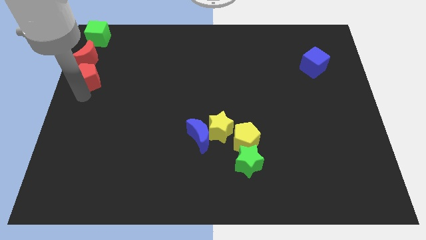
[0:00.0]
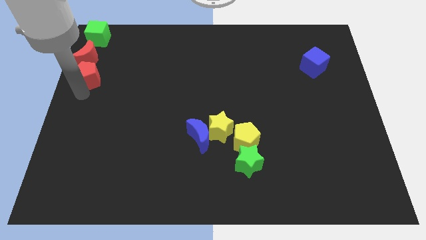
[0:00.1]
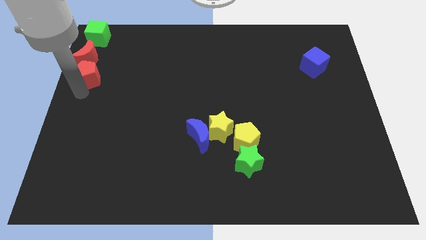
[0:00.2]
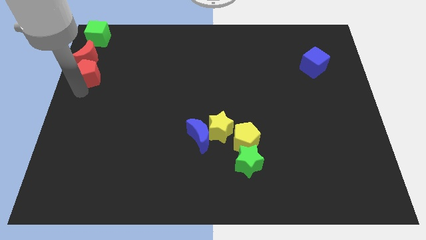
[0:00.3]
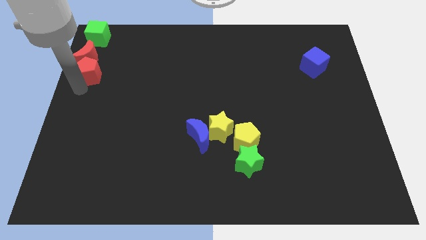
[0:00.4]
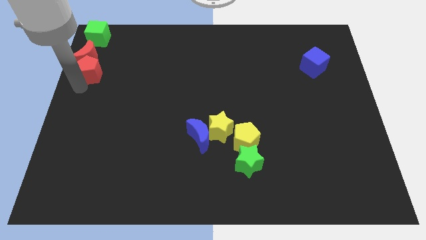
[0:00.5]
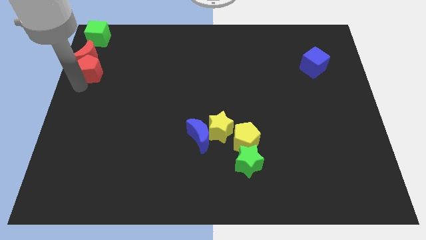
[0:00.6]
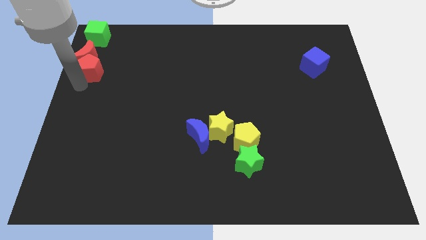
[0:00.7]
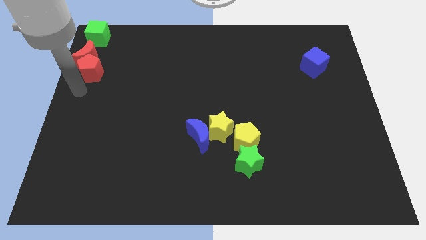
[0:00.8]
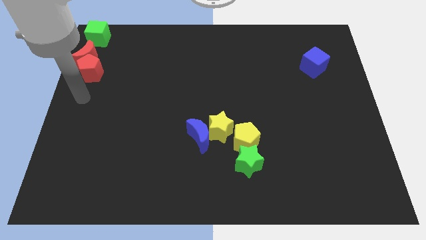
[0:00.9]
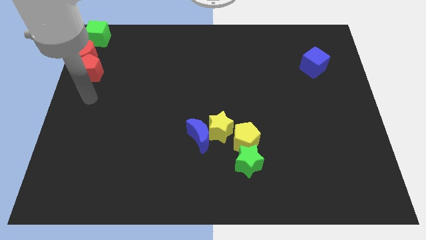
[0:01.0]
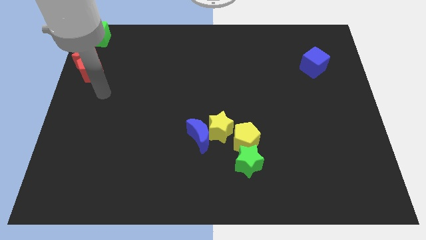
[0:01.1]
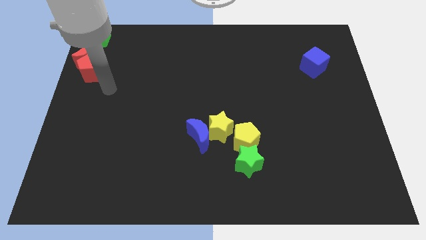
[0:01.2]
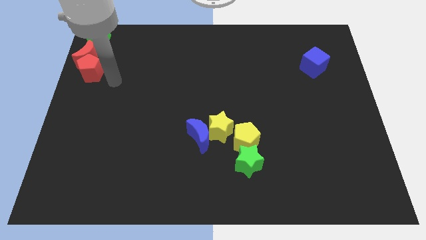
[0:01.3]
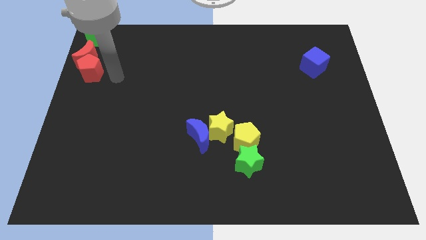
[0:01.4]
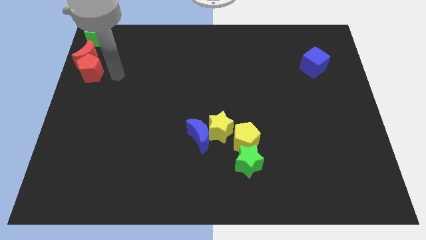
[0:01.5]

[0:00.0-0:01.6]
place the red pentagon below the red crescent

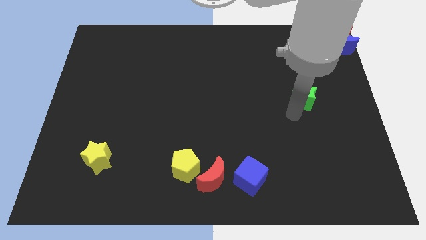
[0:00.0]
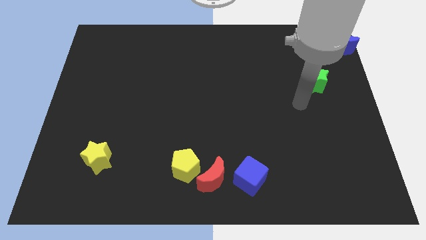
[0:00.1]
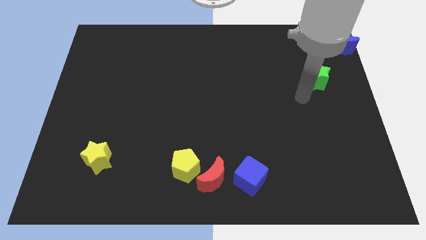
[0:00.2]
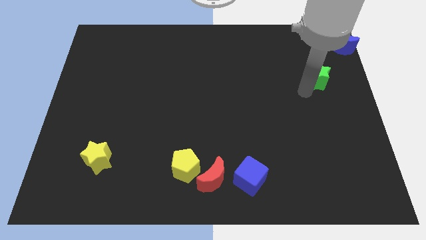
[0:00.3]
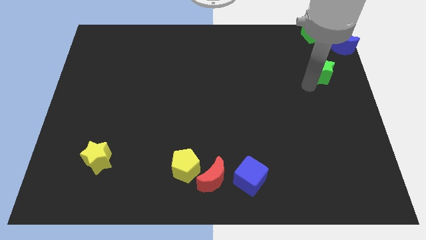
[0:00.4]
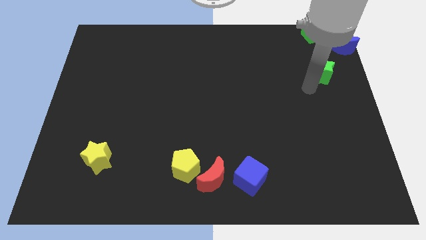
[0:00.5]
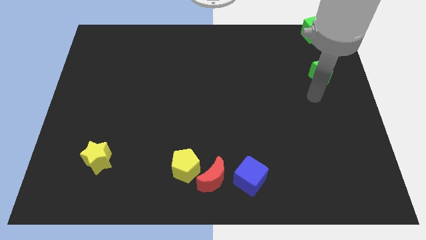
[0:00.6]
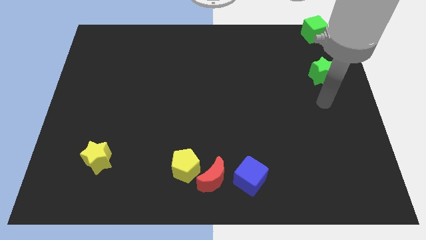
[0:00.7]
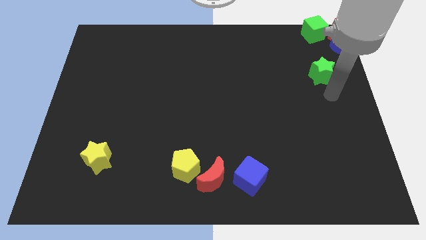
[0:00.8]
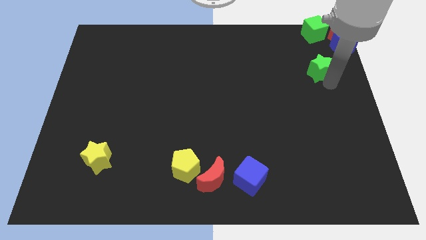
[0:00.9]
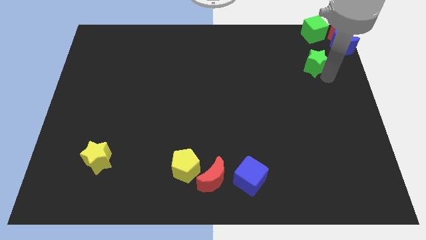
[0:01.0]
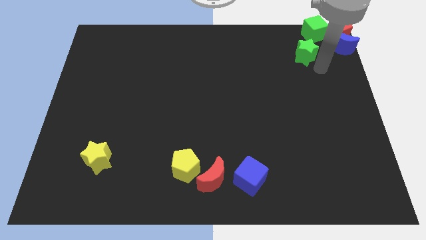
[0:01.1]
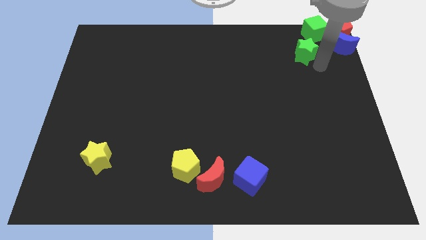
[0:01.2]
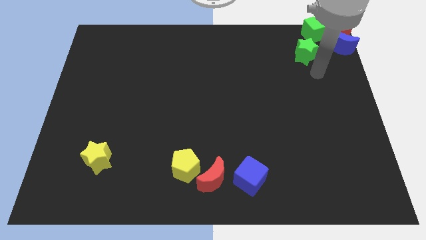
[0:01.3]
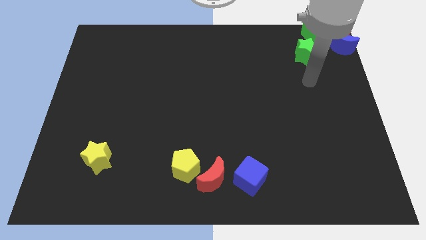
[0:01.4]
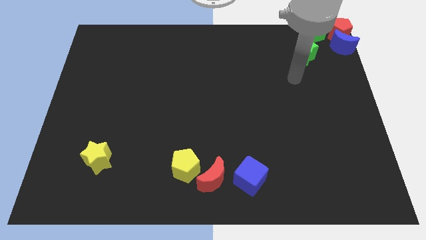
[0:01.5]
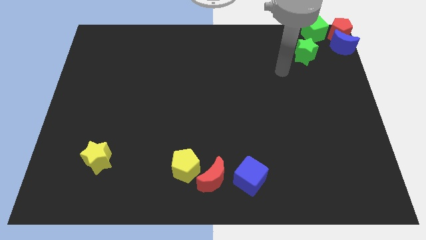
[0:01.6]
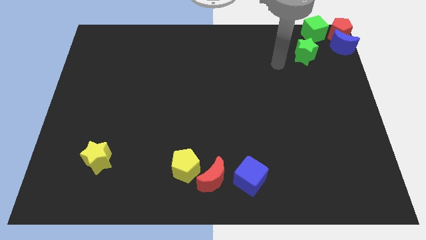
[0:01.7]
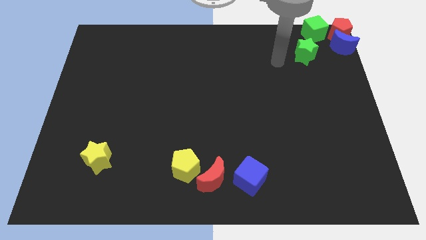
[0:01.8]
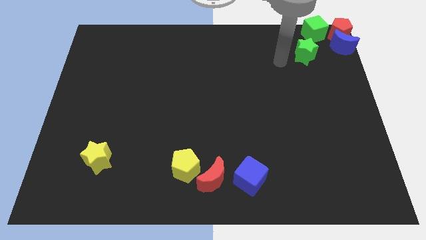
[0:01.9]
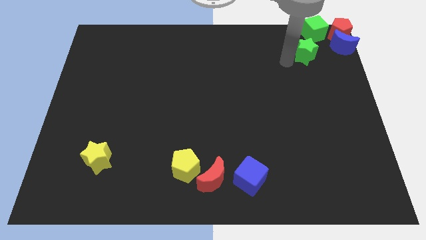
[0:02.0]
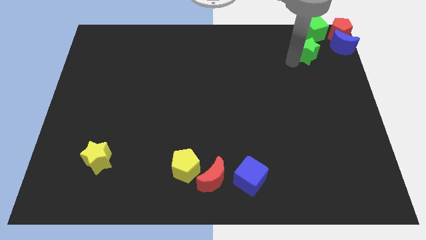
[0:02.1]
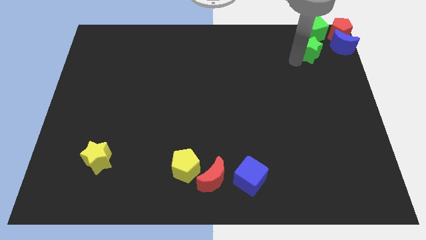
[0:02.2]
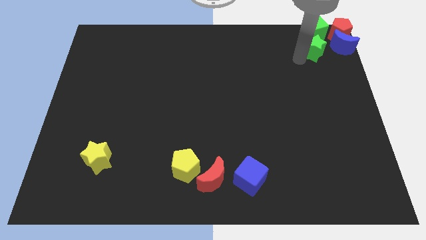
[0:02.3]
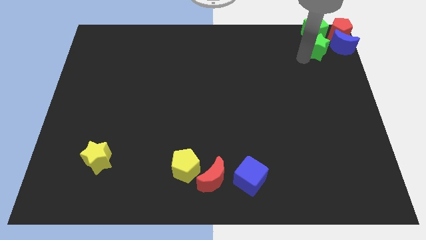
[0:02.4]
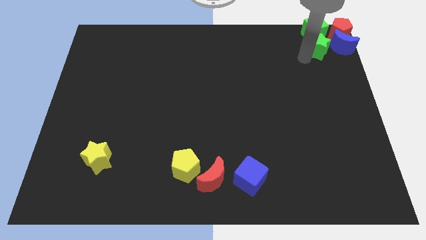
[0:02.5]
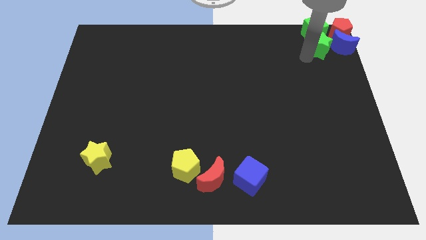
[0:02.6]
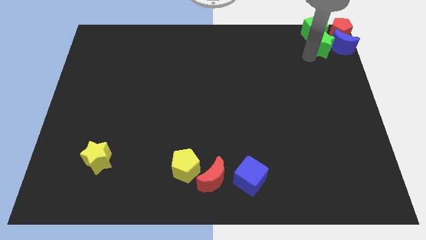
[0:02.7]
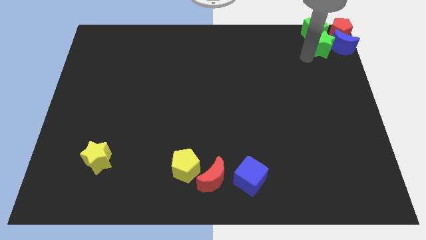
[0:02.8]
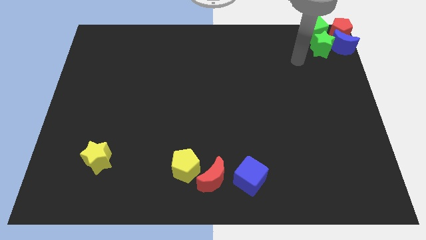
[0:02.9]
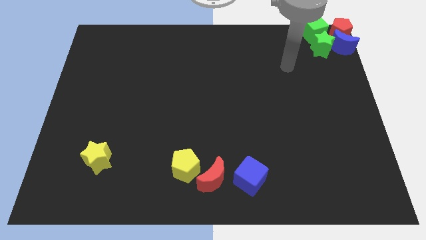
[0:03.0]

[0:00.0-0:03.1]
push the green star into the group of blocks

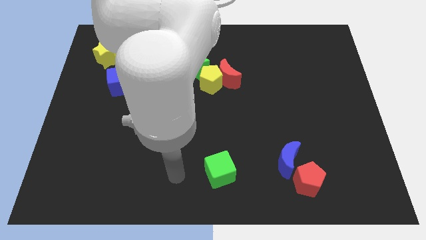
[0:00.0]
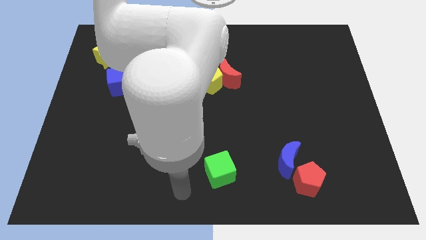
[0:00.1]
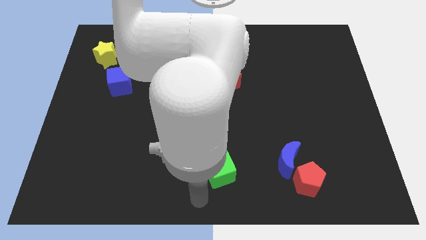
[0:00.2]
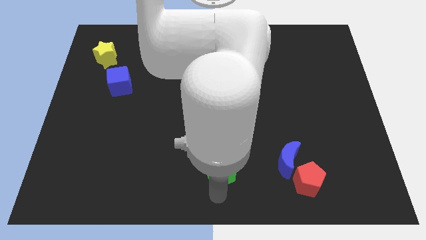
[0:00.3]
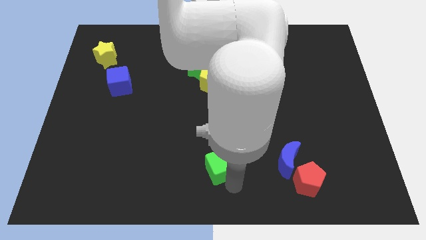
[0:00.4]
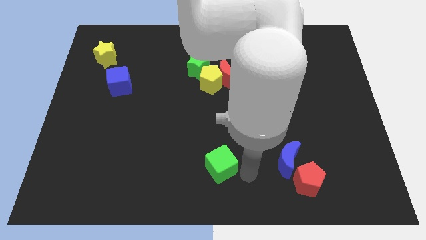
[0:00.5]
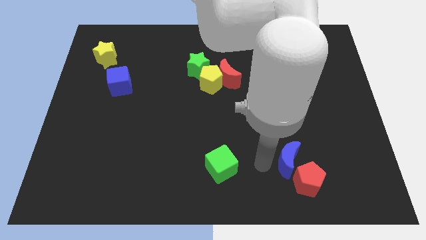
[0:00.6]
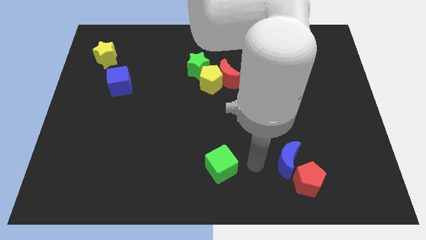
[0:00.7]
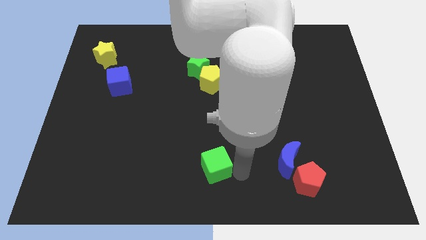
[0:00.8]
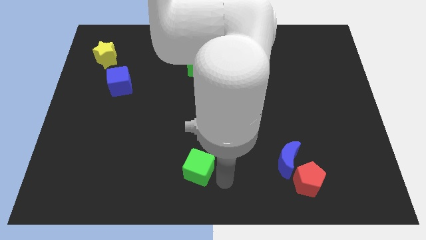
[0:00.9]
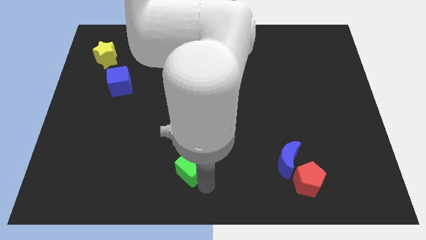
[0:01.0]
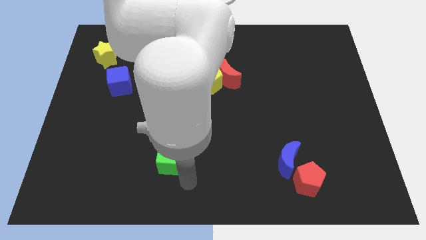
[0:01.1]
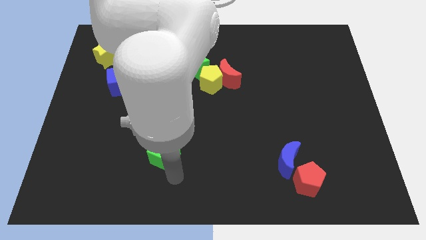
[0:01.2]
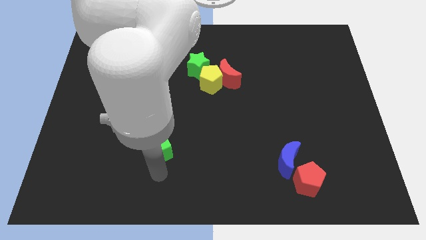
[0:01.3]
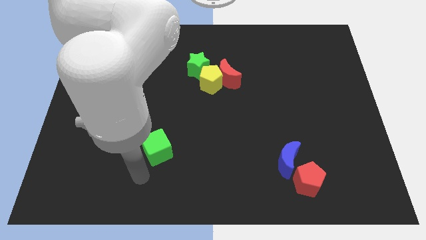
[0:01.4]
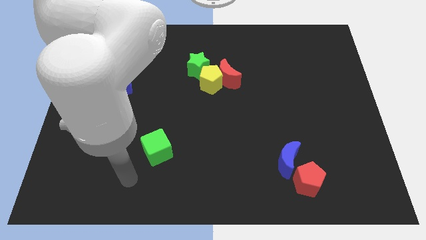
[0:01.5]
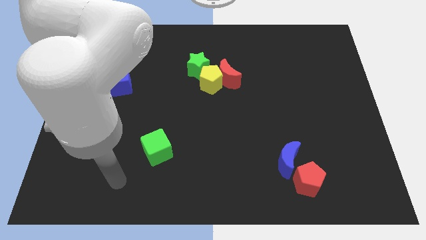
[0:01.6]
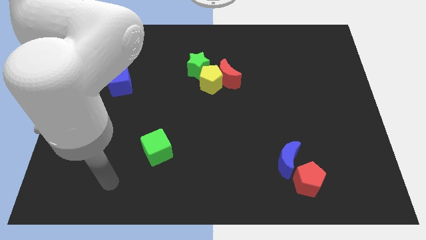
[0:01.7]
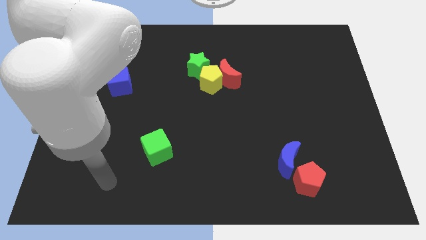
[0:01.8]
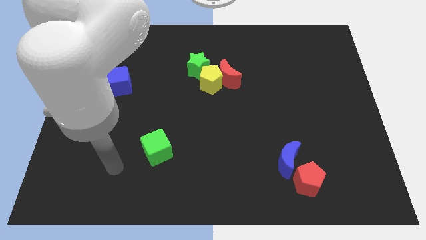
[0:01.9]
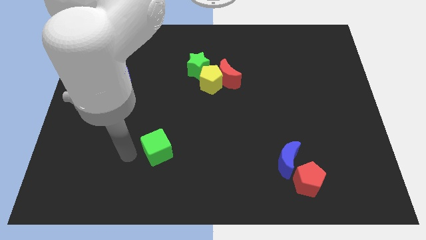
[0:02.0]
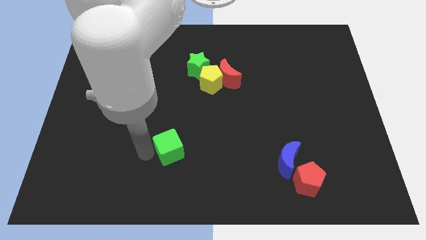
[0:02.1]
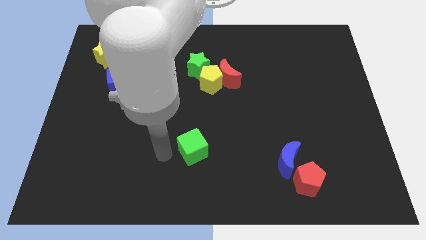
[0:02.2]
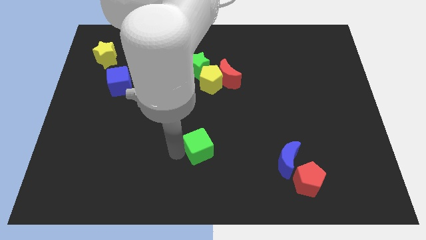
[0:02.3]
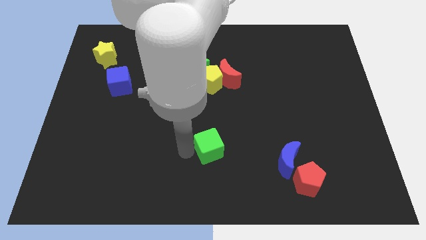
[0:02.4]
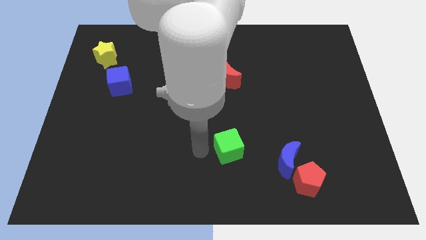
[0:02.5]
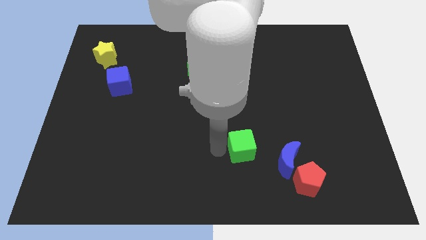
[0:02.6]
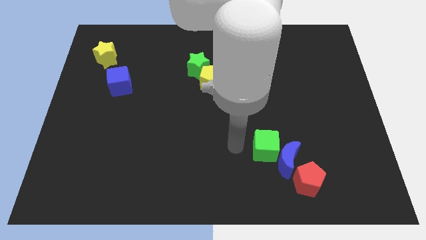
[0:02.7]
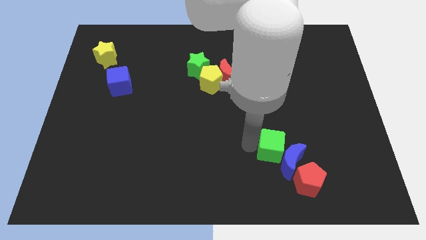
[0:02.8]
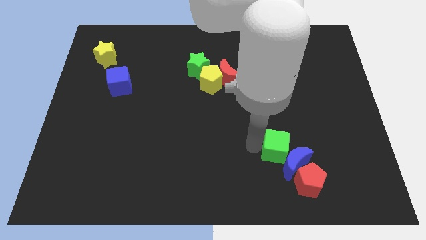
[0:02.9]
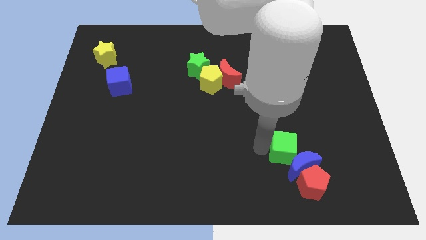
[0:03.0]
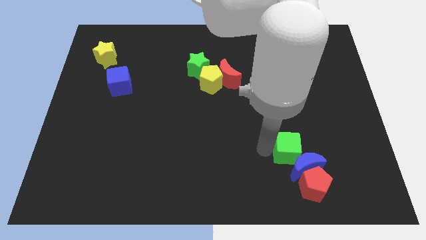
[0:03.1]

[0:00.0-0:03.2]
push the green cube into the blue crescent

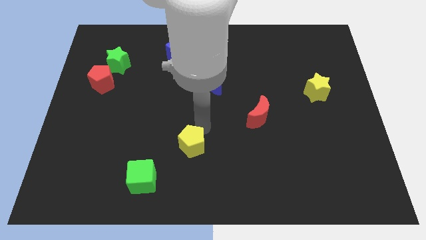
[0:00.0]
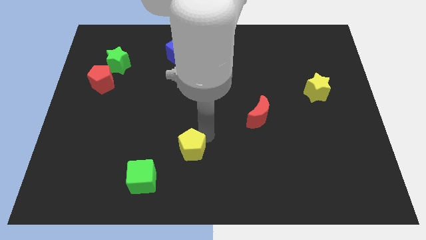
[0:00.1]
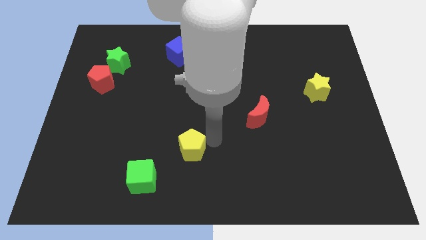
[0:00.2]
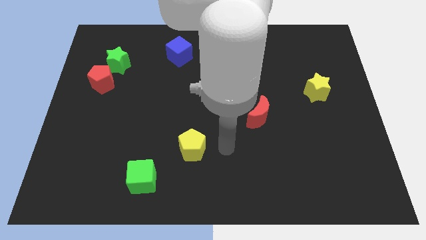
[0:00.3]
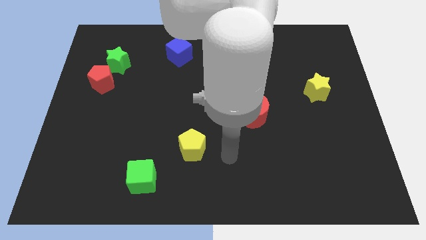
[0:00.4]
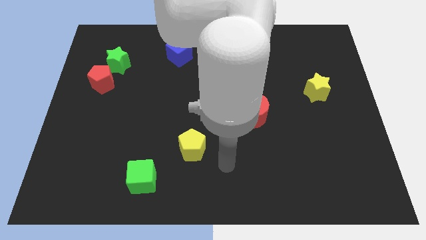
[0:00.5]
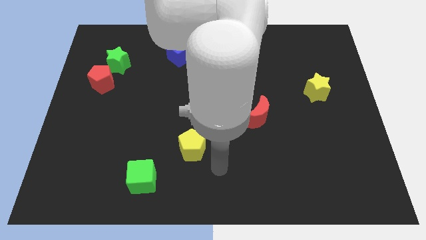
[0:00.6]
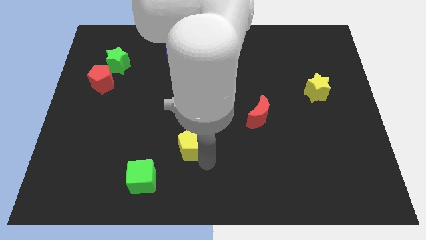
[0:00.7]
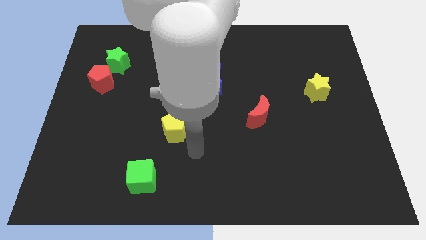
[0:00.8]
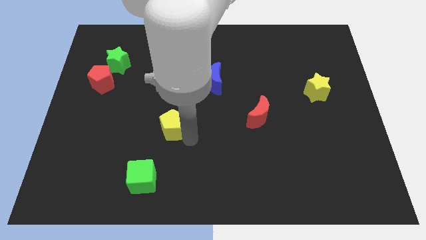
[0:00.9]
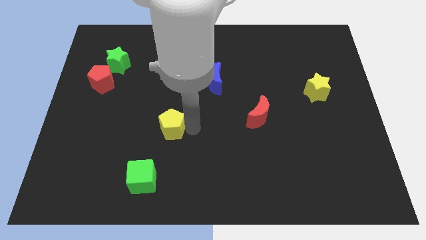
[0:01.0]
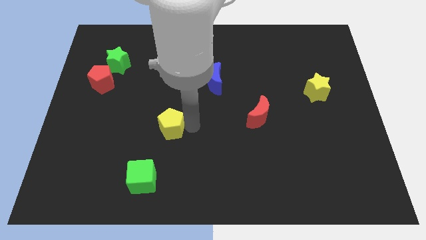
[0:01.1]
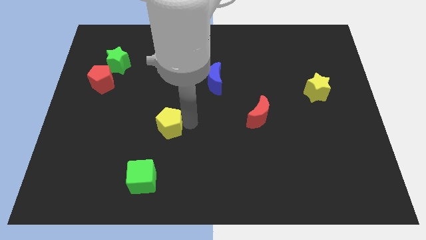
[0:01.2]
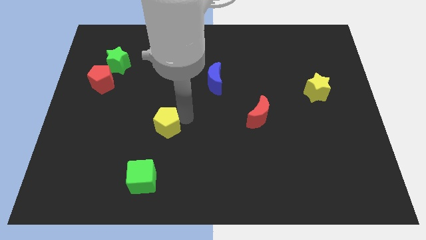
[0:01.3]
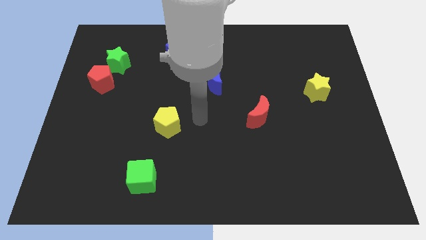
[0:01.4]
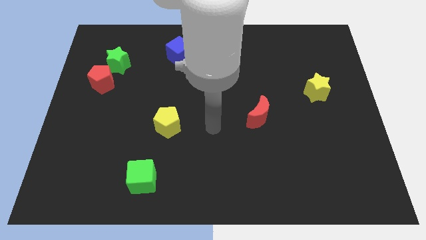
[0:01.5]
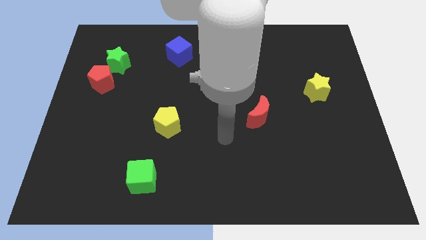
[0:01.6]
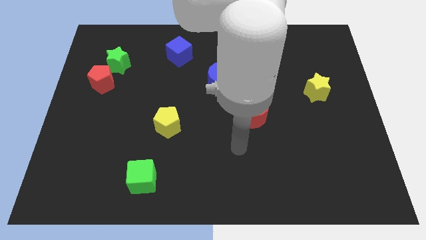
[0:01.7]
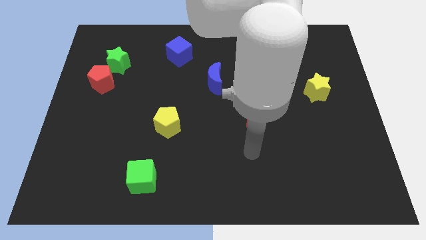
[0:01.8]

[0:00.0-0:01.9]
place the yellow pentagon vertically below the blue cube
